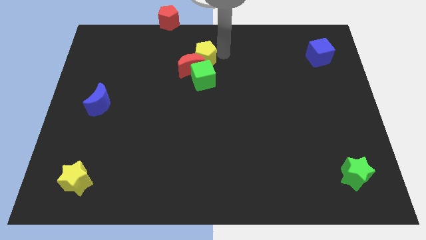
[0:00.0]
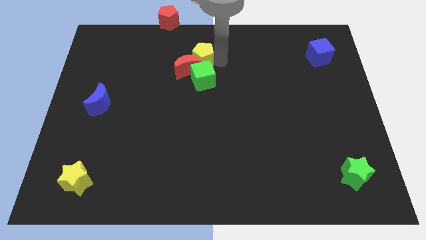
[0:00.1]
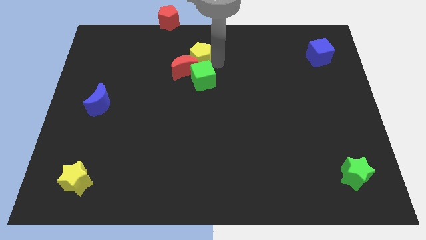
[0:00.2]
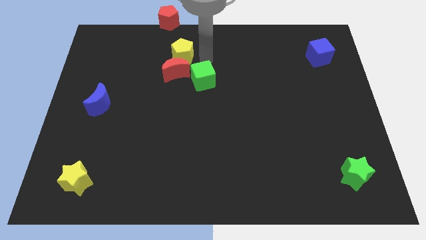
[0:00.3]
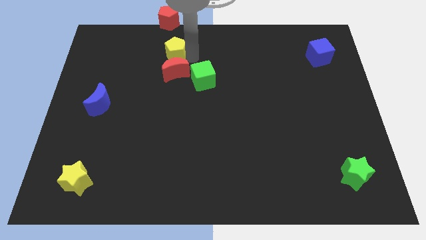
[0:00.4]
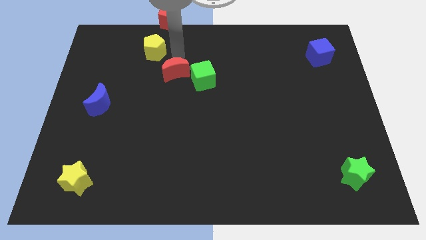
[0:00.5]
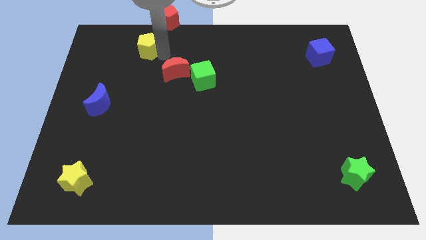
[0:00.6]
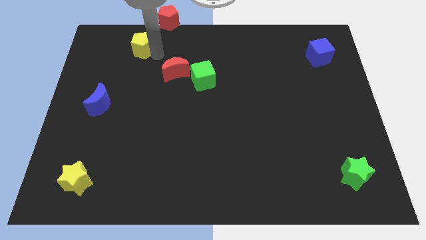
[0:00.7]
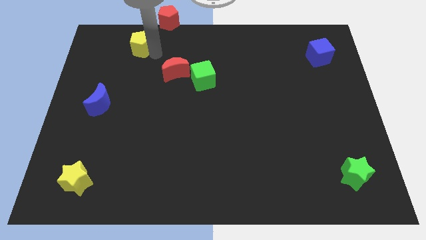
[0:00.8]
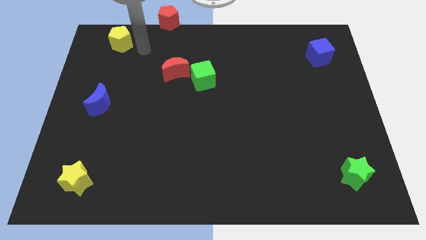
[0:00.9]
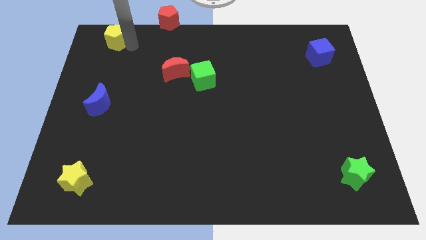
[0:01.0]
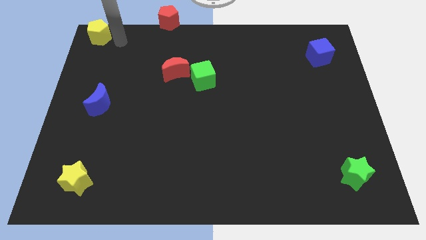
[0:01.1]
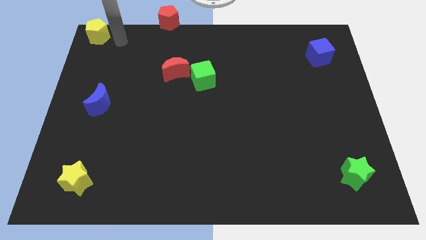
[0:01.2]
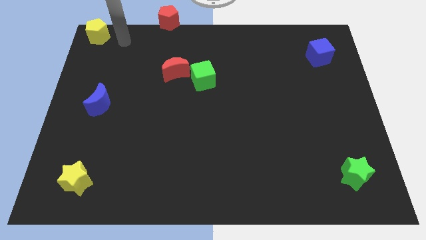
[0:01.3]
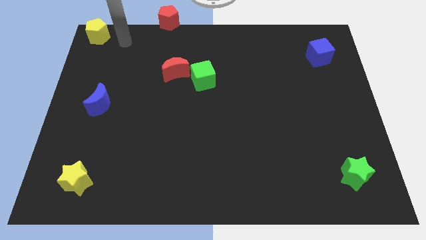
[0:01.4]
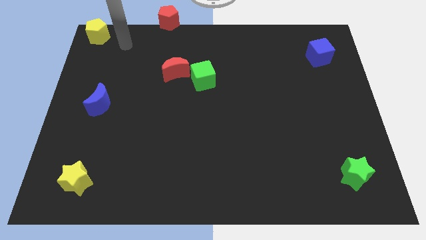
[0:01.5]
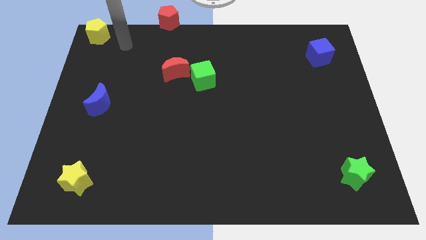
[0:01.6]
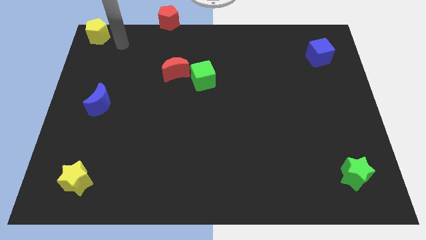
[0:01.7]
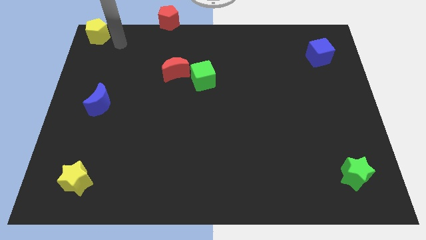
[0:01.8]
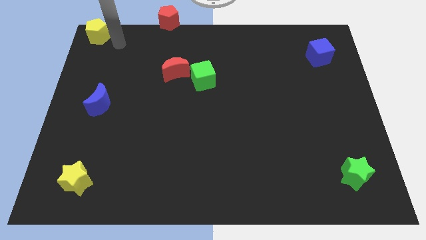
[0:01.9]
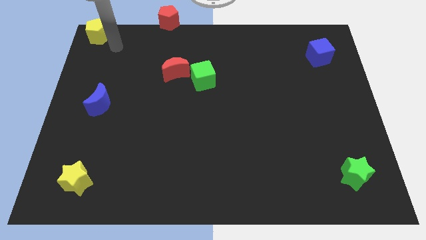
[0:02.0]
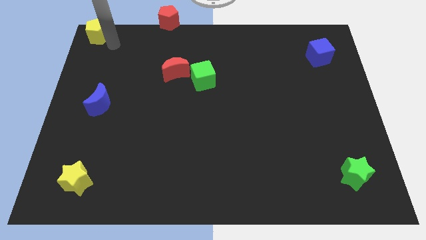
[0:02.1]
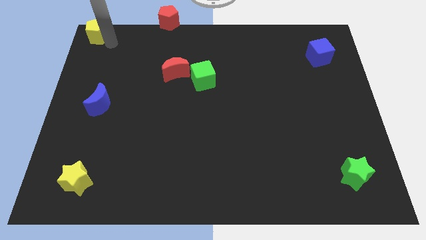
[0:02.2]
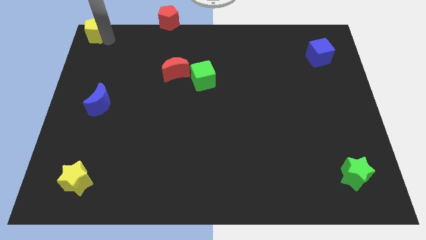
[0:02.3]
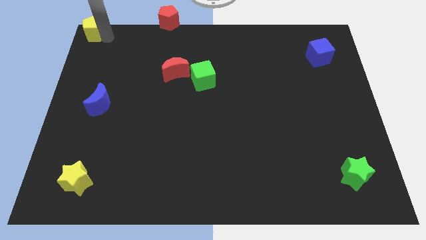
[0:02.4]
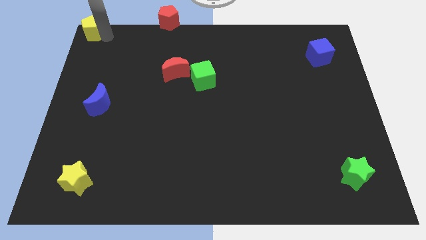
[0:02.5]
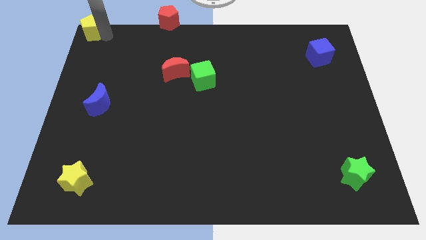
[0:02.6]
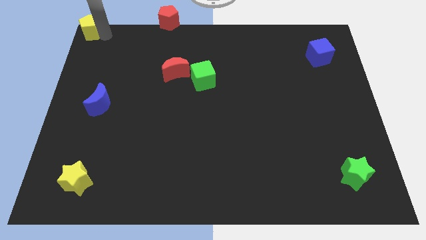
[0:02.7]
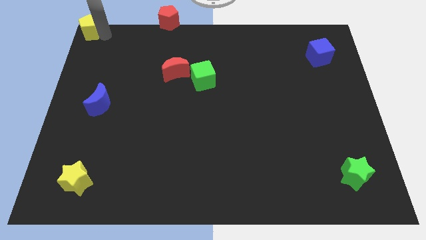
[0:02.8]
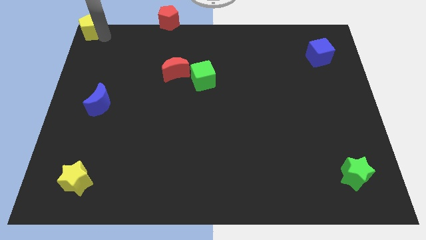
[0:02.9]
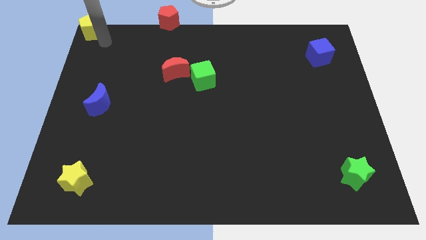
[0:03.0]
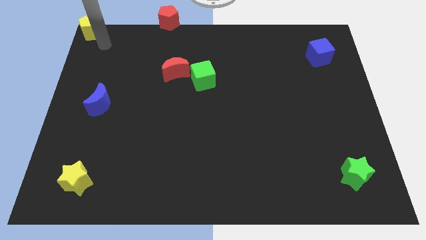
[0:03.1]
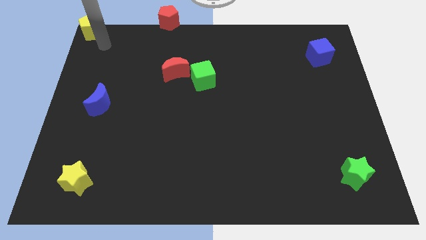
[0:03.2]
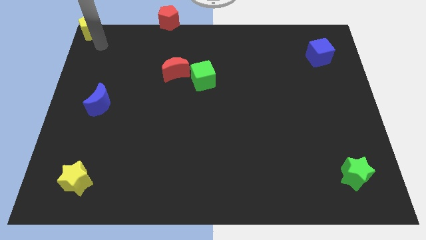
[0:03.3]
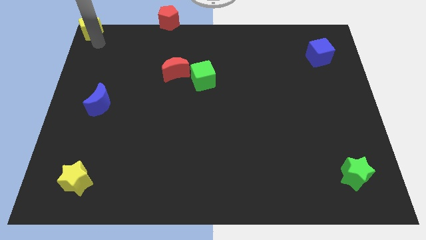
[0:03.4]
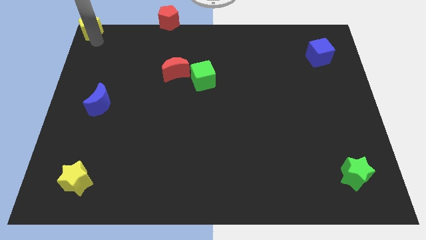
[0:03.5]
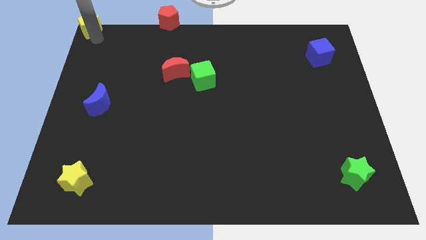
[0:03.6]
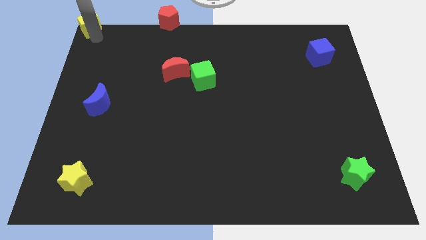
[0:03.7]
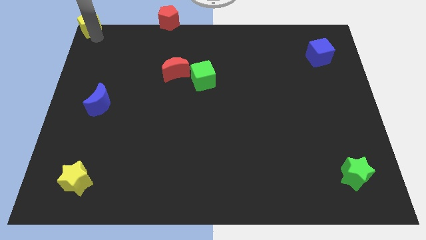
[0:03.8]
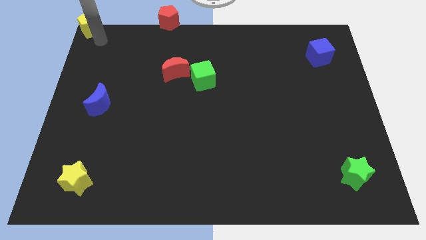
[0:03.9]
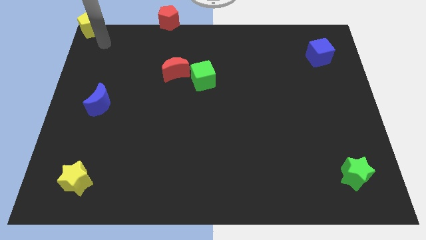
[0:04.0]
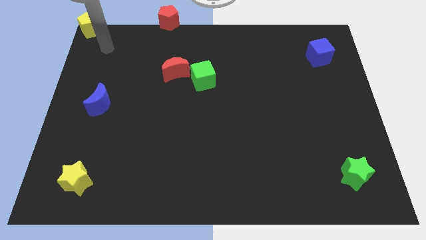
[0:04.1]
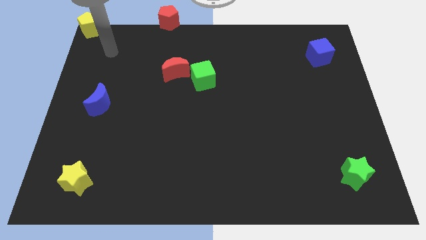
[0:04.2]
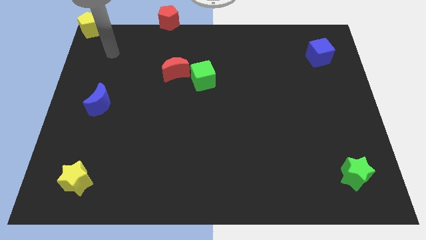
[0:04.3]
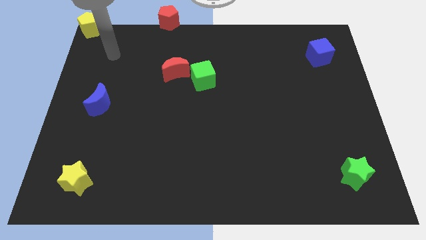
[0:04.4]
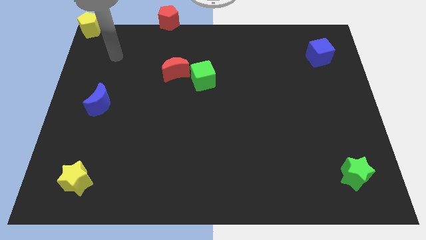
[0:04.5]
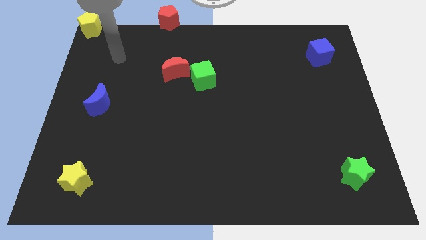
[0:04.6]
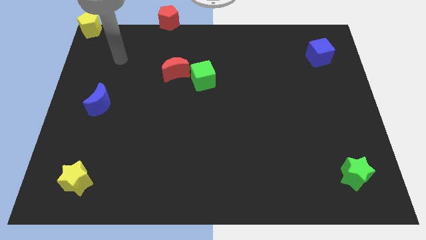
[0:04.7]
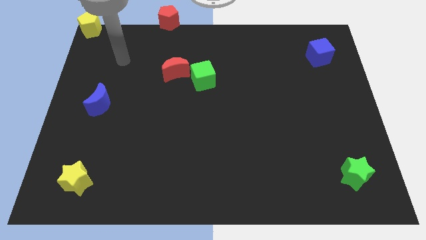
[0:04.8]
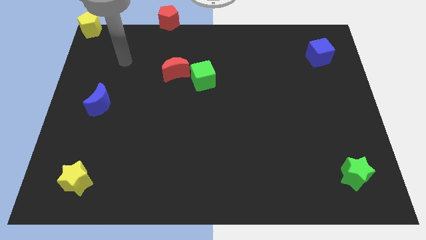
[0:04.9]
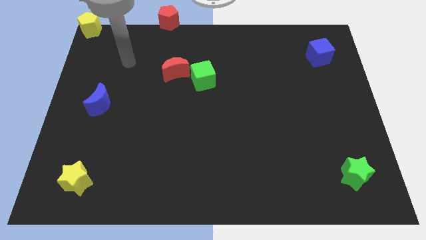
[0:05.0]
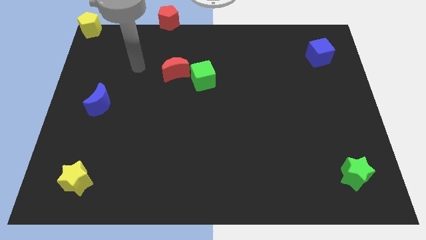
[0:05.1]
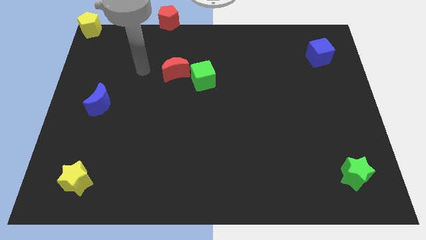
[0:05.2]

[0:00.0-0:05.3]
place yellow pentagon to the top left corner

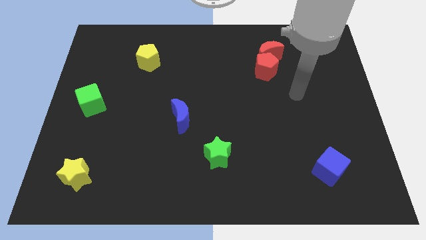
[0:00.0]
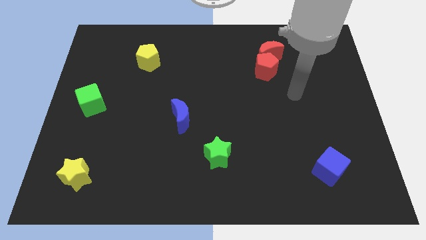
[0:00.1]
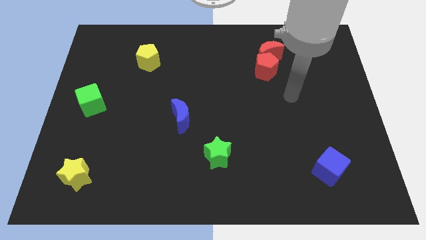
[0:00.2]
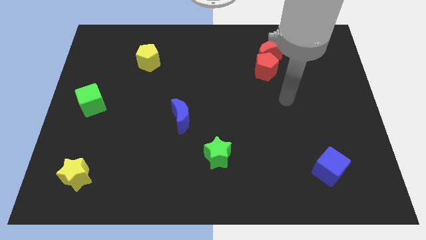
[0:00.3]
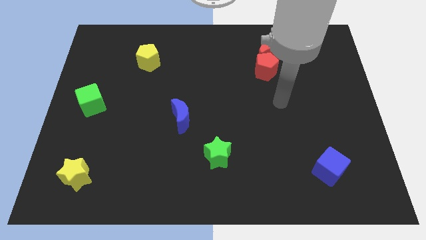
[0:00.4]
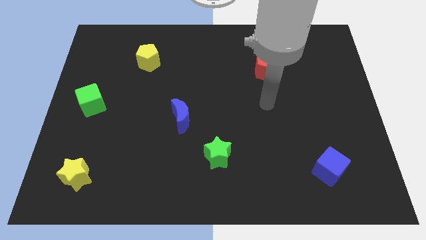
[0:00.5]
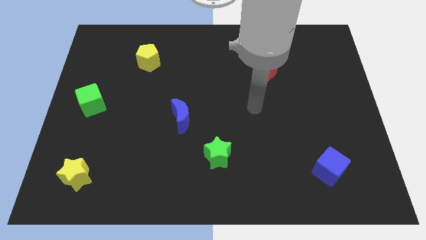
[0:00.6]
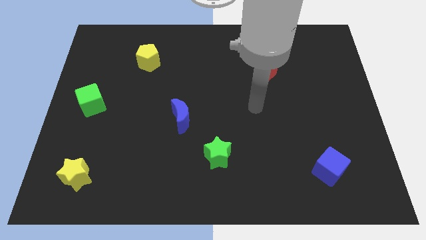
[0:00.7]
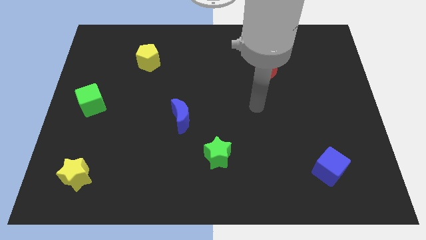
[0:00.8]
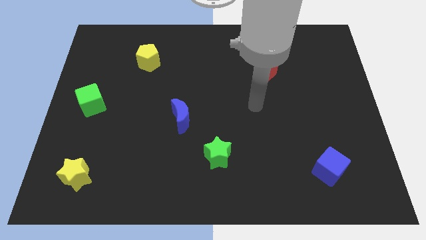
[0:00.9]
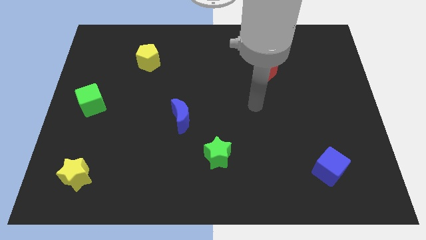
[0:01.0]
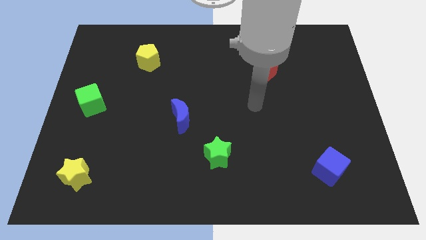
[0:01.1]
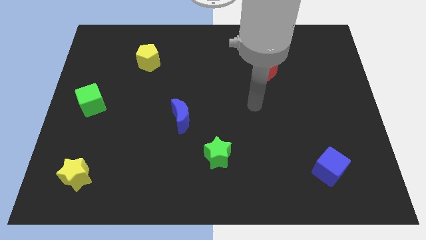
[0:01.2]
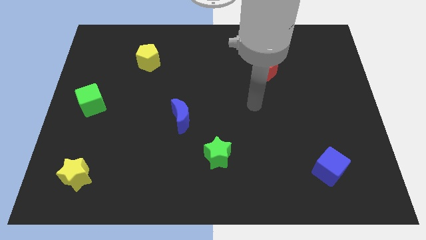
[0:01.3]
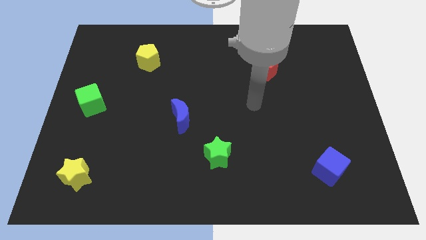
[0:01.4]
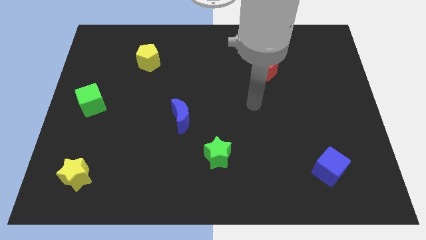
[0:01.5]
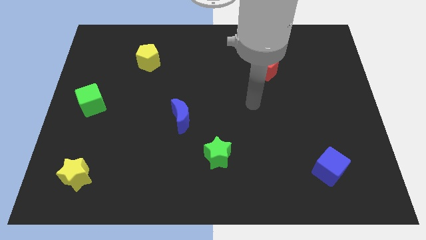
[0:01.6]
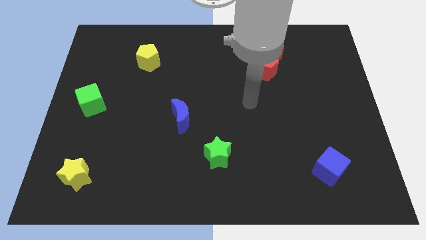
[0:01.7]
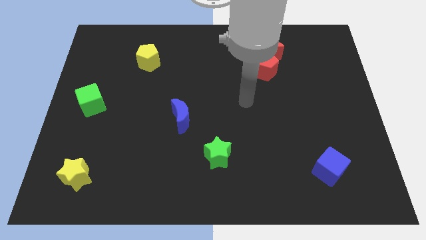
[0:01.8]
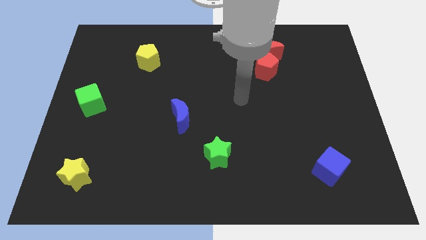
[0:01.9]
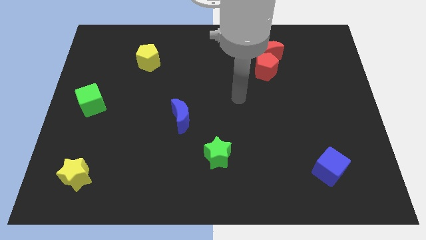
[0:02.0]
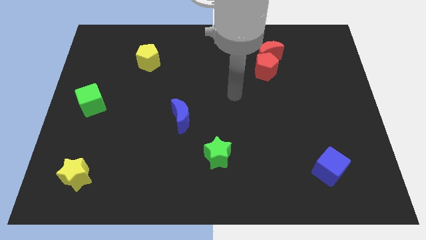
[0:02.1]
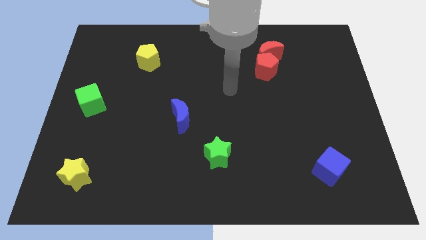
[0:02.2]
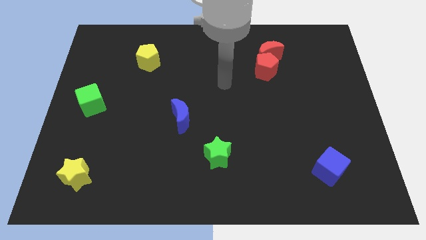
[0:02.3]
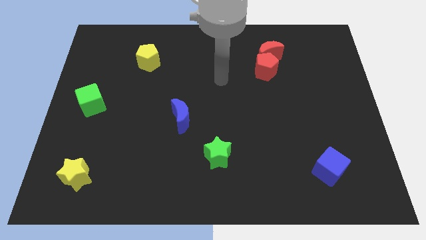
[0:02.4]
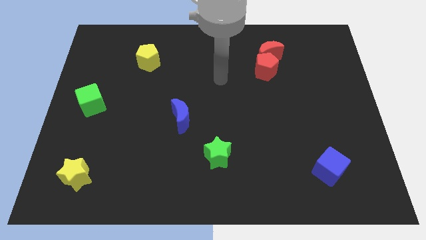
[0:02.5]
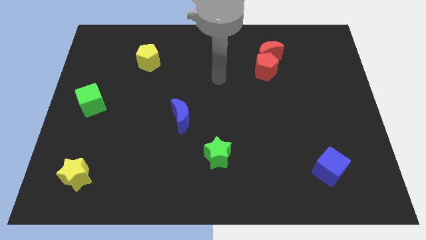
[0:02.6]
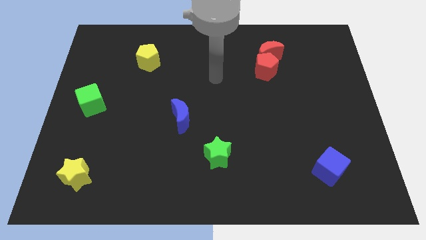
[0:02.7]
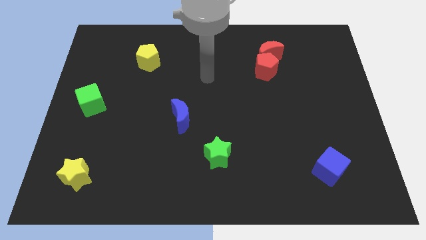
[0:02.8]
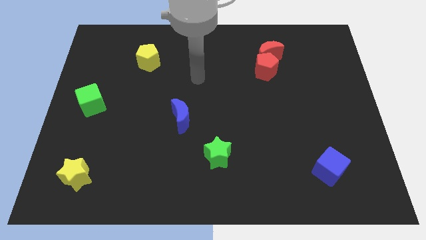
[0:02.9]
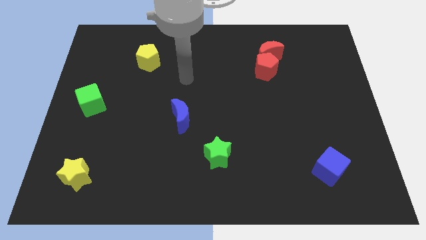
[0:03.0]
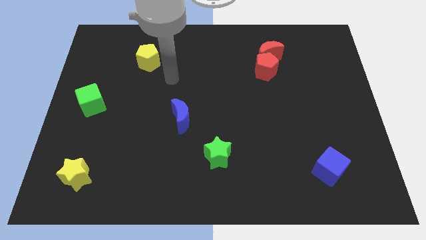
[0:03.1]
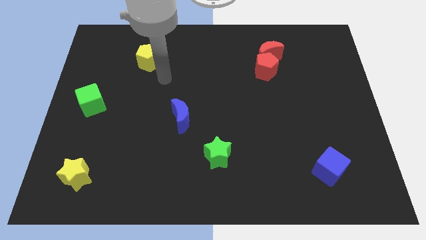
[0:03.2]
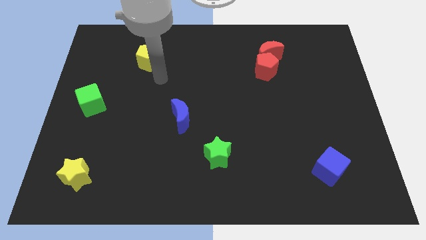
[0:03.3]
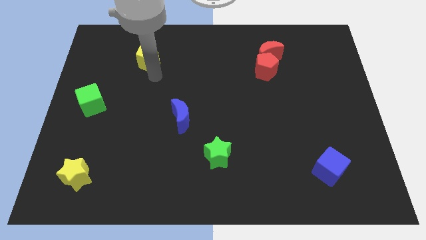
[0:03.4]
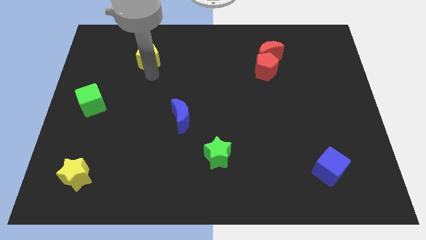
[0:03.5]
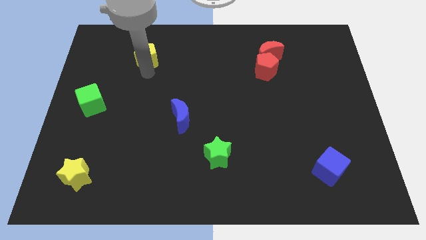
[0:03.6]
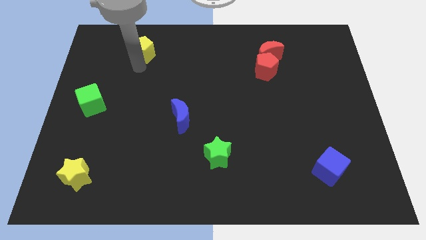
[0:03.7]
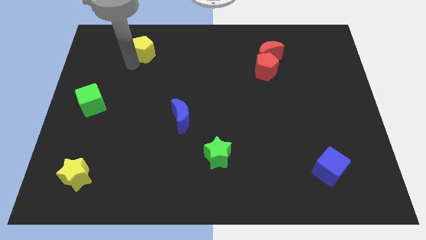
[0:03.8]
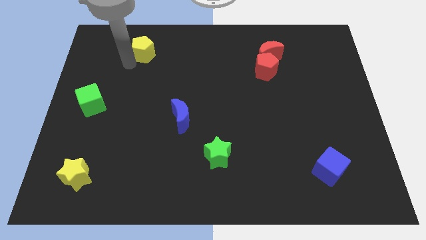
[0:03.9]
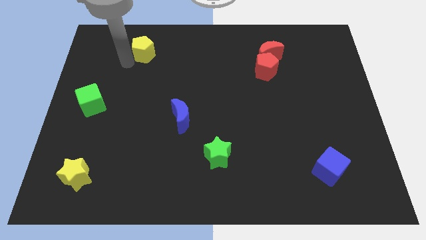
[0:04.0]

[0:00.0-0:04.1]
push the yellow pentagon slightly to the top side of the board
